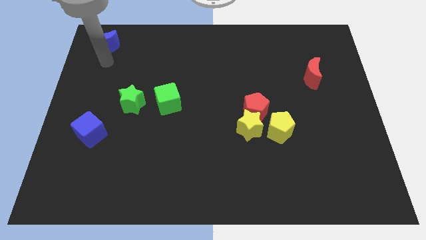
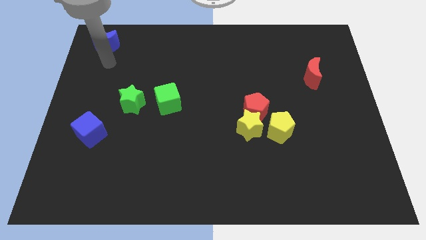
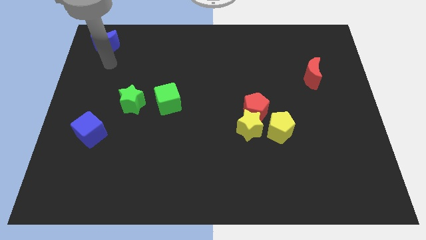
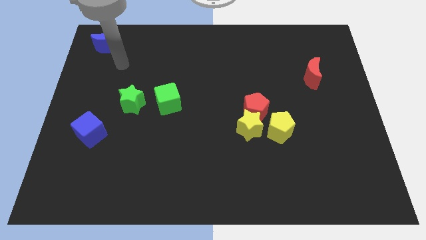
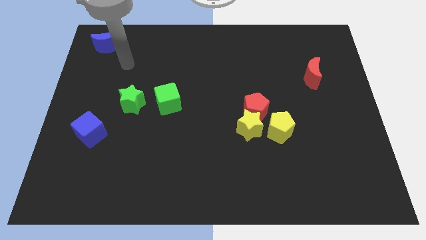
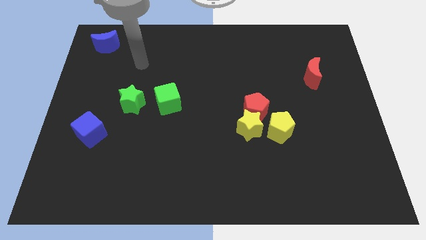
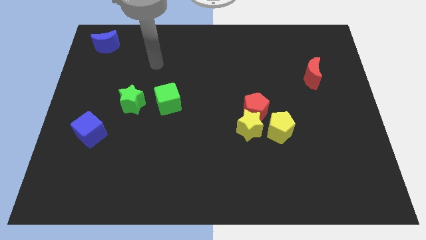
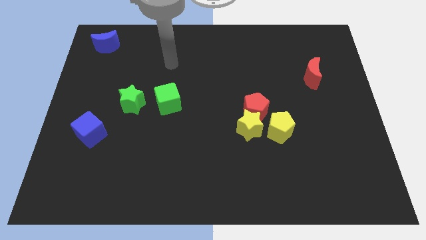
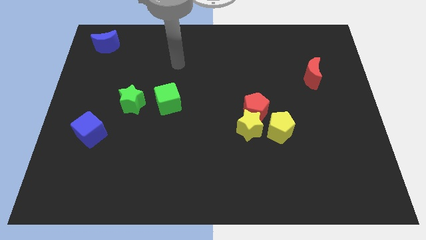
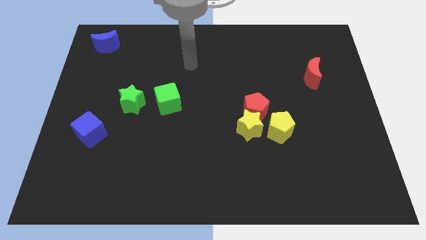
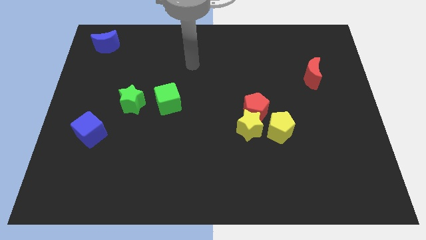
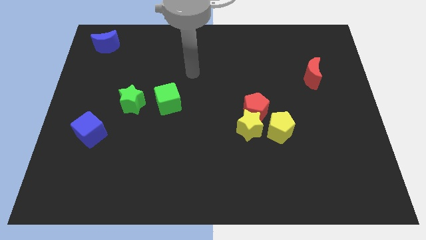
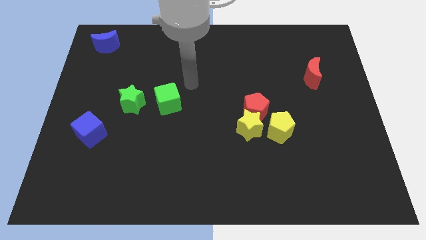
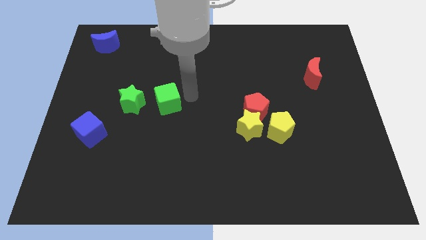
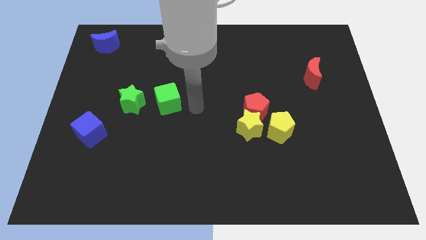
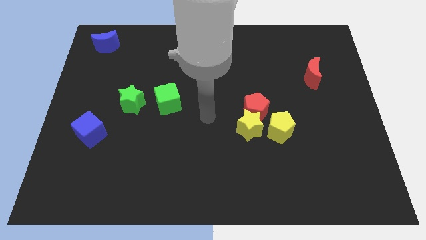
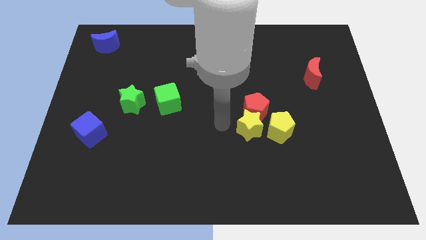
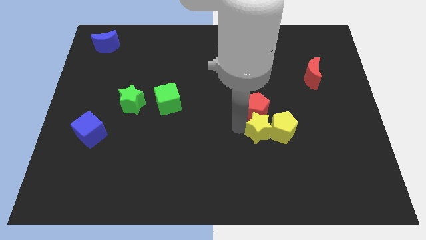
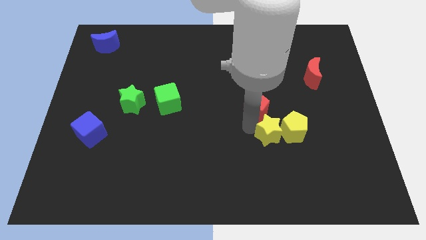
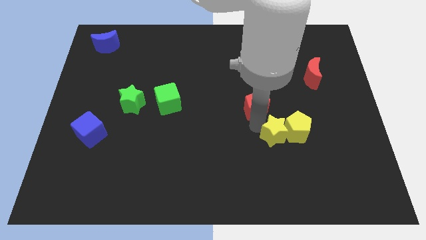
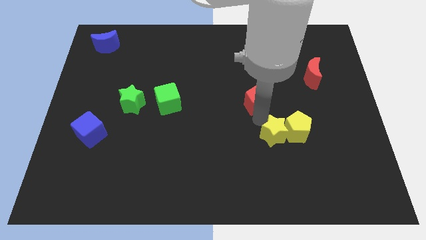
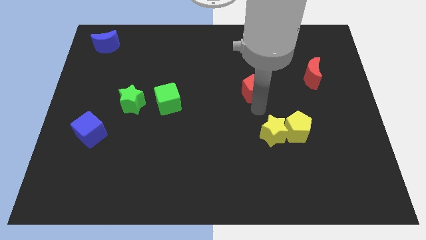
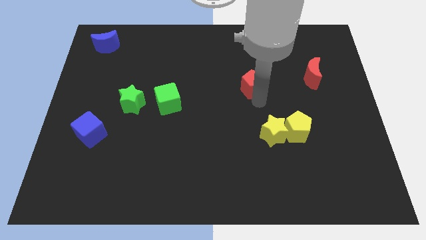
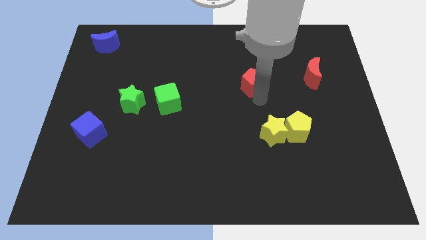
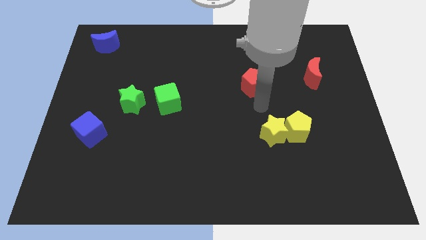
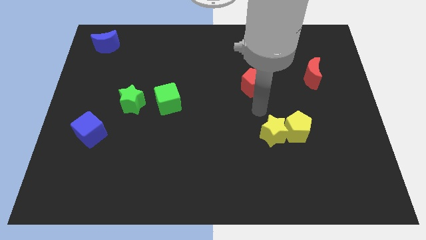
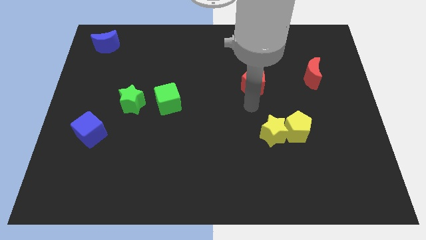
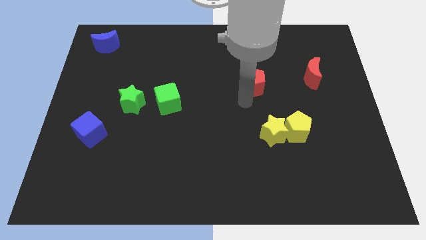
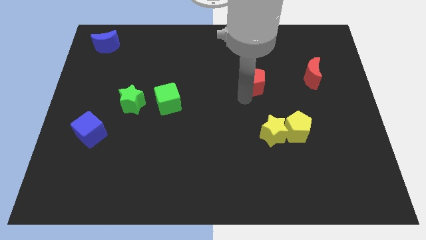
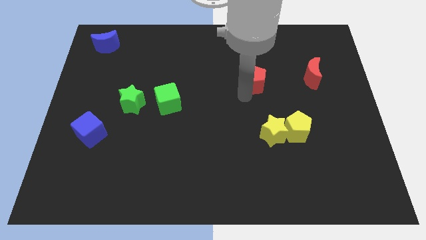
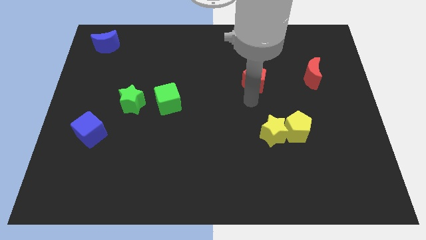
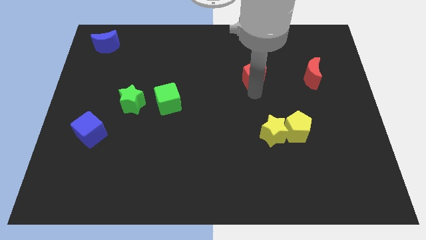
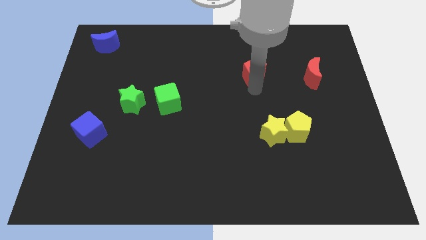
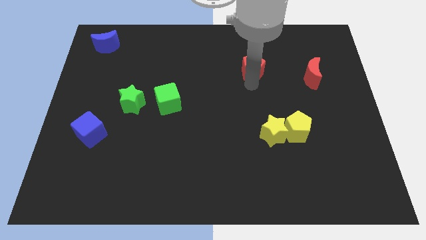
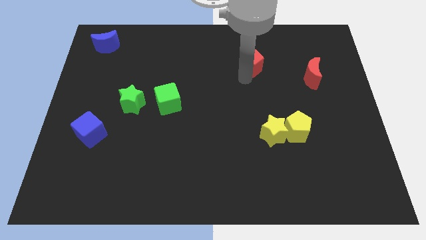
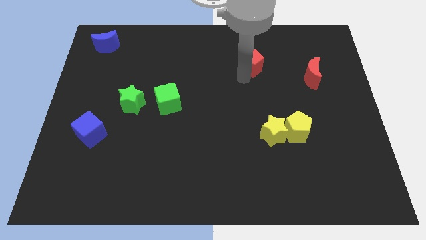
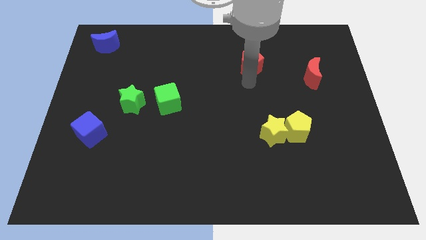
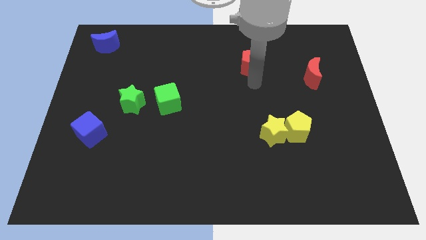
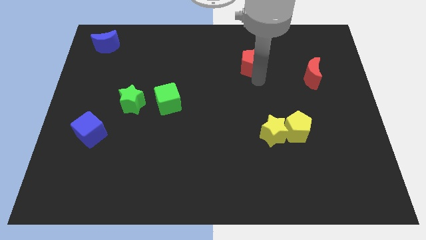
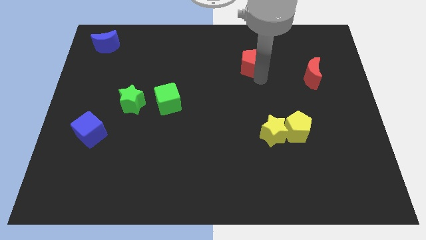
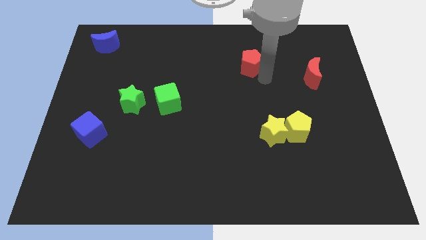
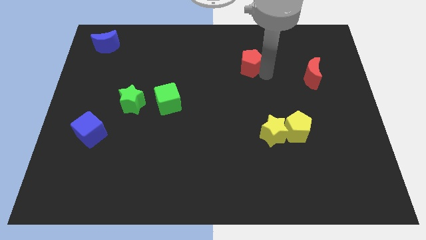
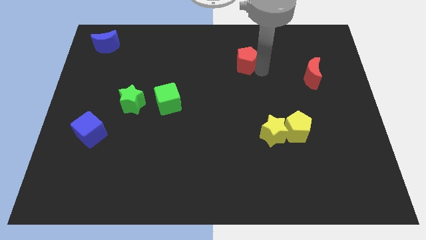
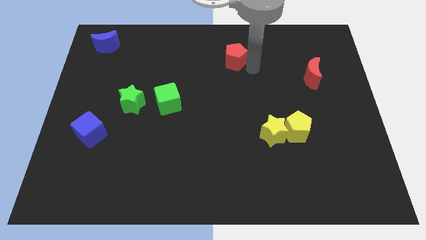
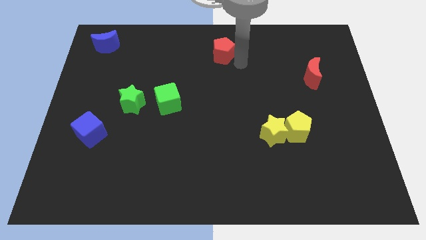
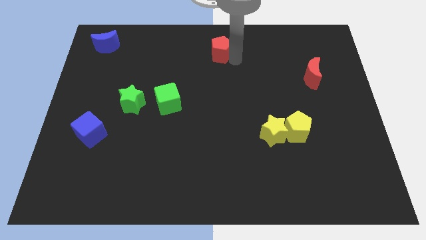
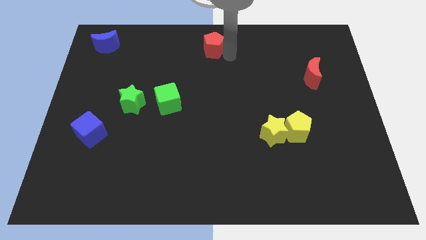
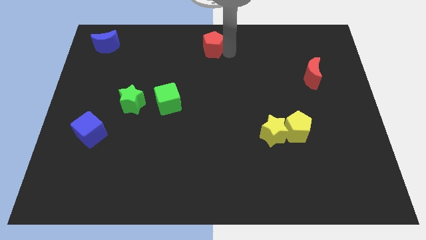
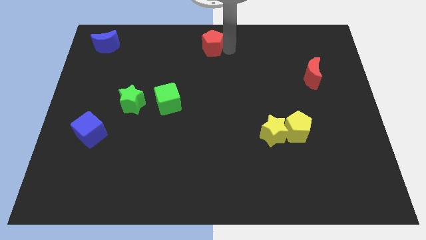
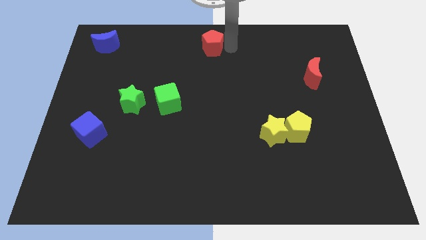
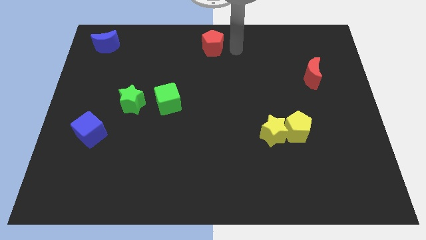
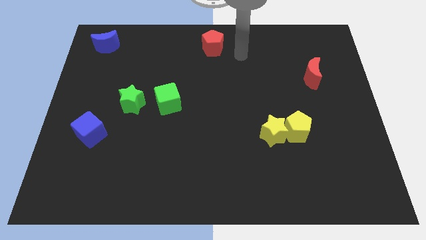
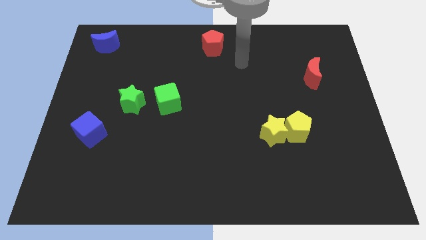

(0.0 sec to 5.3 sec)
push the red pentagon at the top center of the table

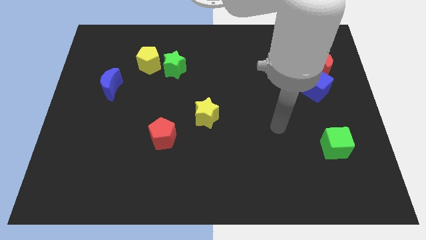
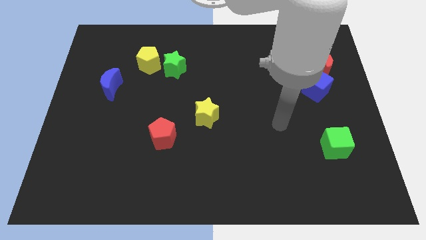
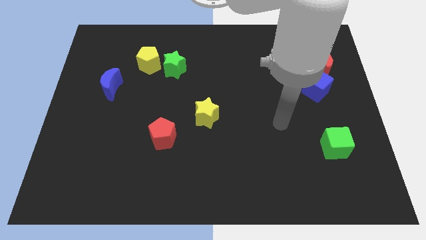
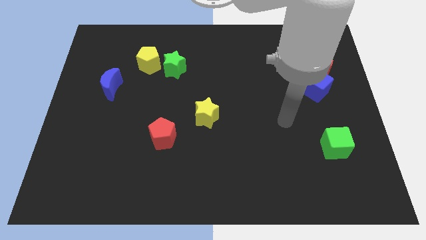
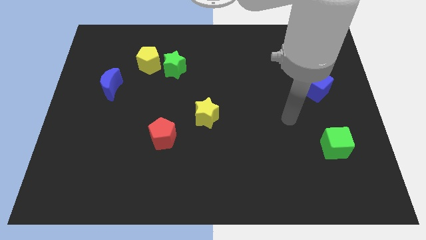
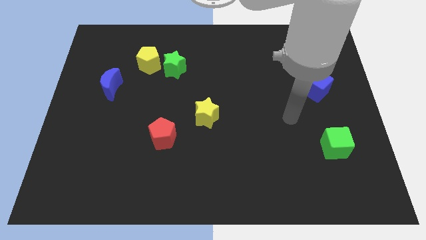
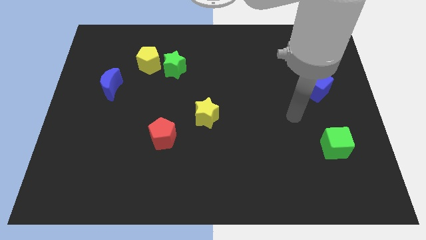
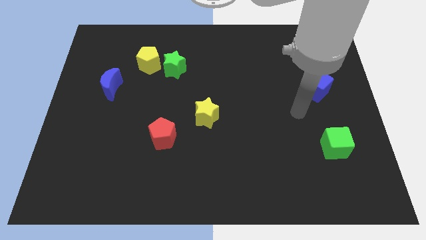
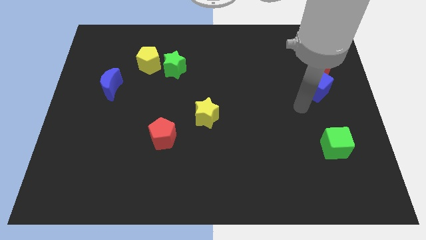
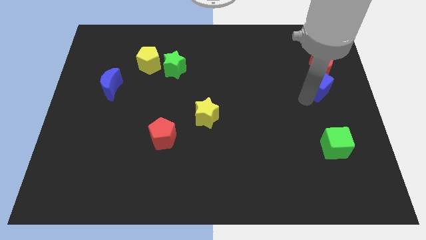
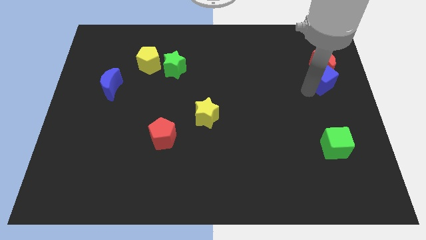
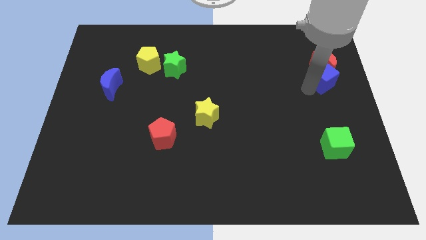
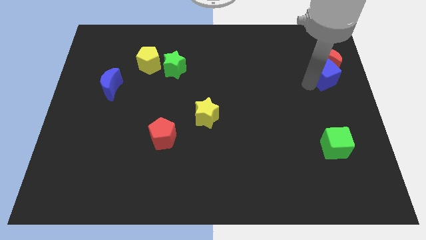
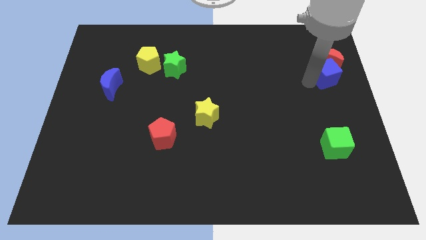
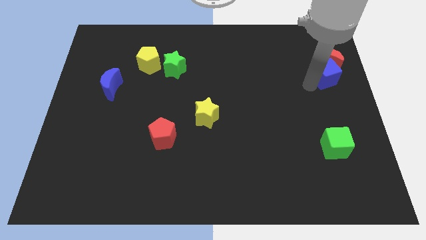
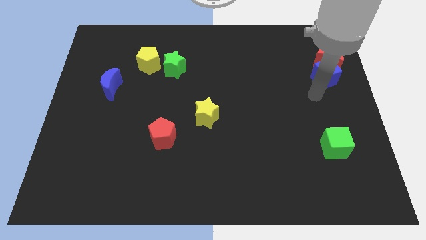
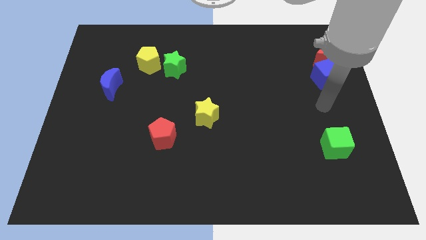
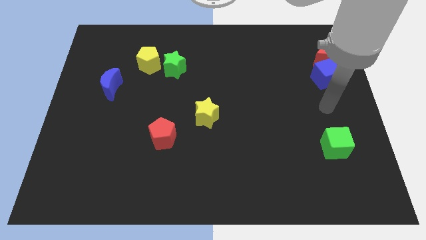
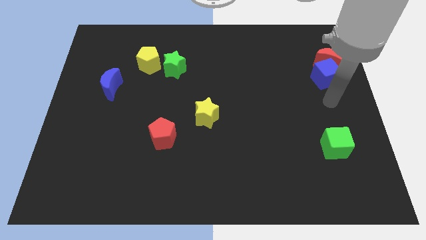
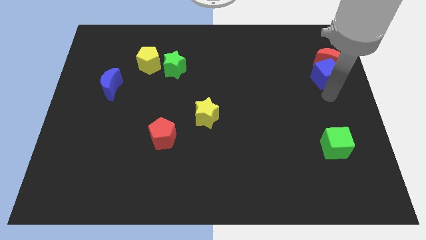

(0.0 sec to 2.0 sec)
move blue cube along with red moon towards top right

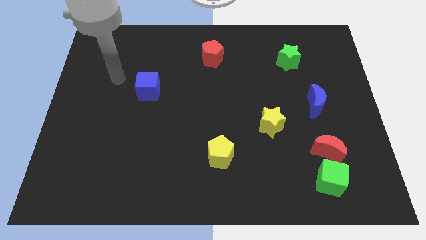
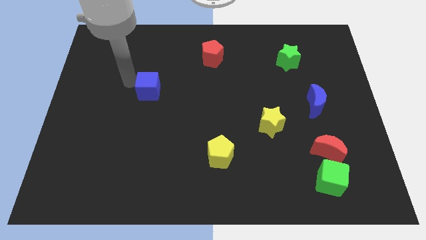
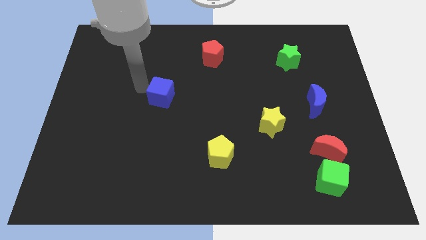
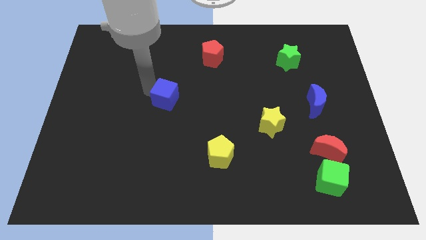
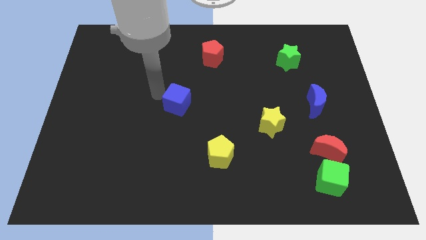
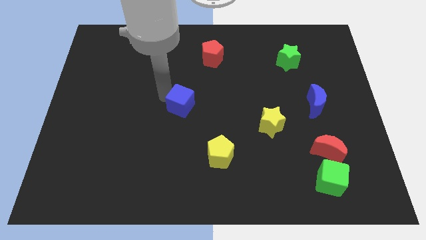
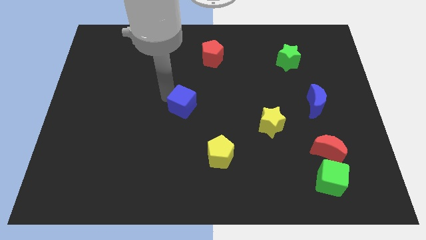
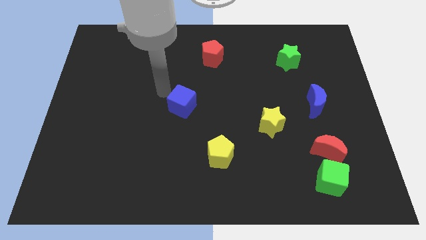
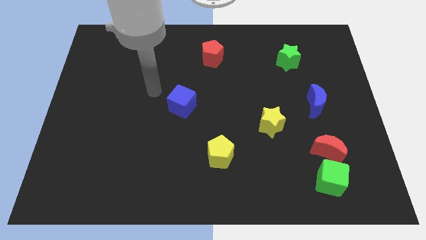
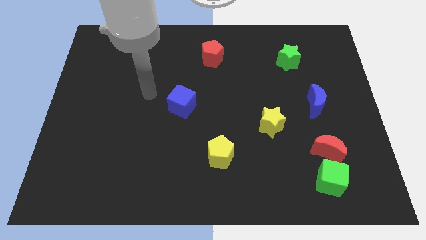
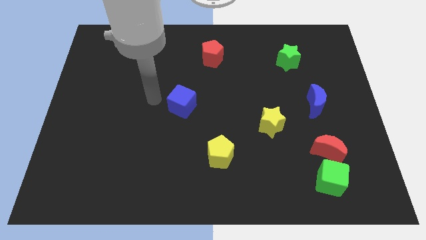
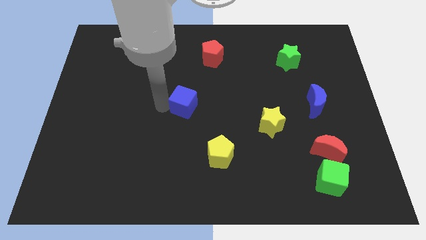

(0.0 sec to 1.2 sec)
push the blue cube parallel to the blue crescent

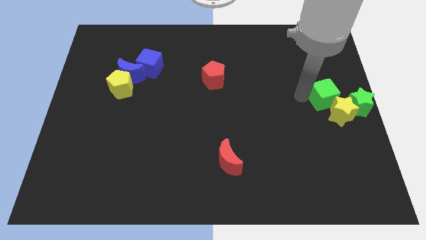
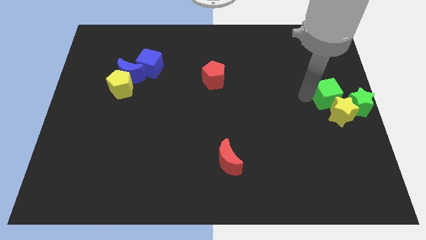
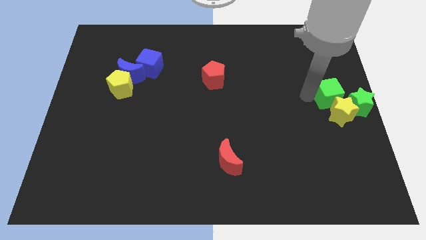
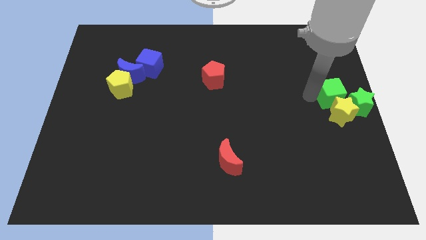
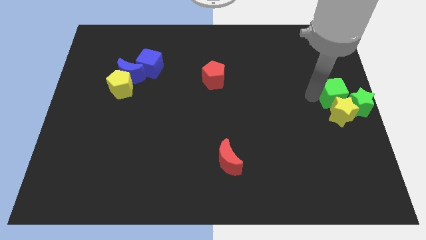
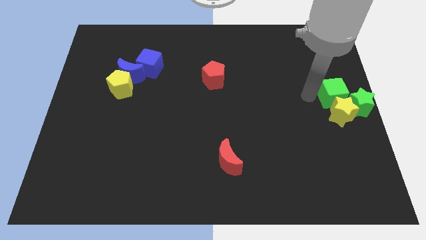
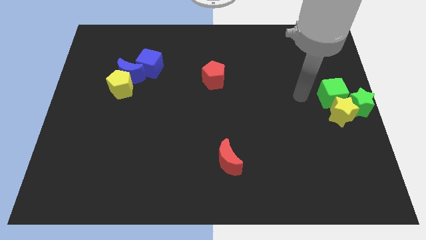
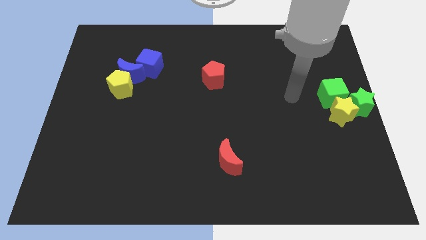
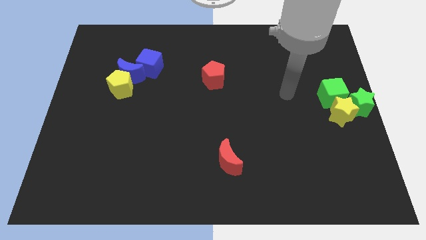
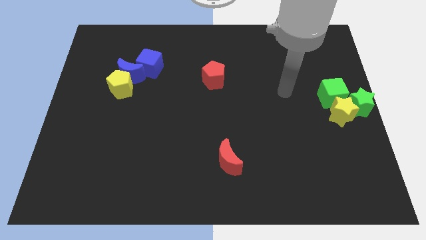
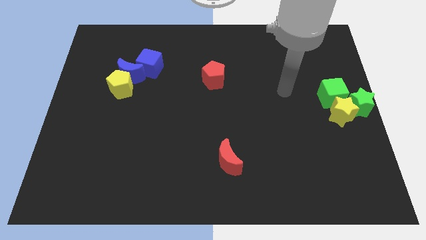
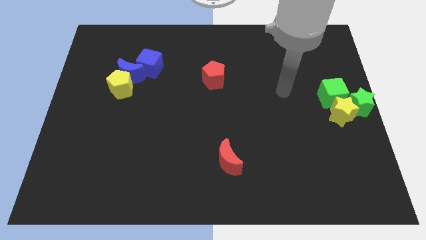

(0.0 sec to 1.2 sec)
adjust the green cube to the top of the yellow star
